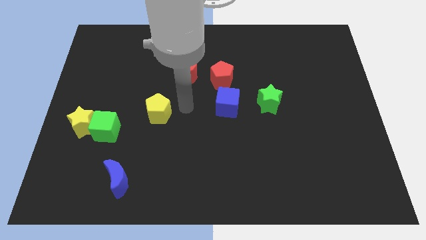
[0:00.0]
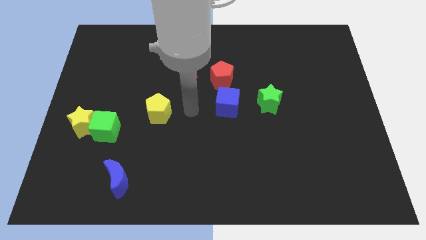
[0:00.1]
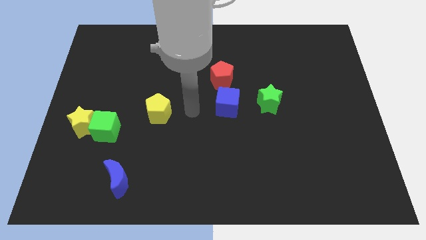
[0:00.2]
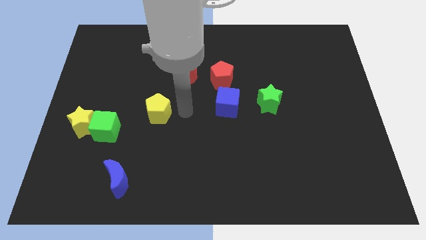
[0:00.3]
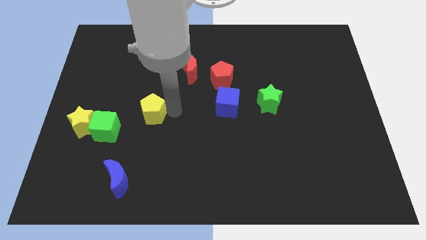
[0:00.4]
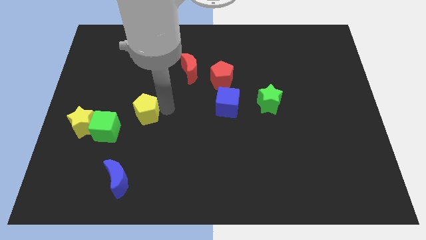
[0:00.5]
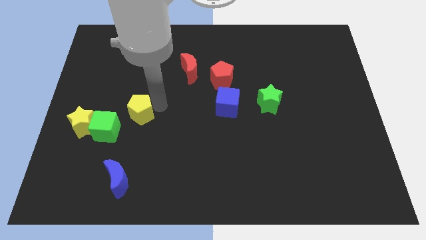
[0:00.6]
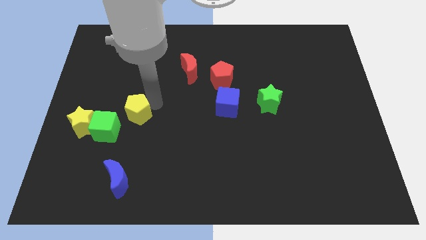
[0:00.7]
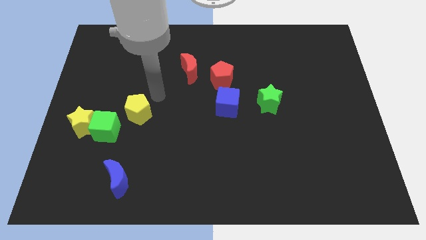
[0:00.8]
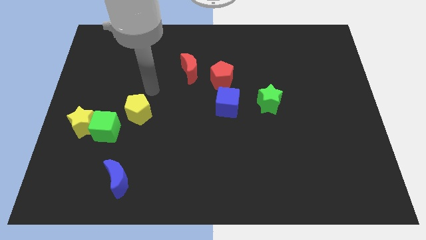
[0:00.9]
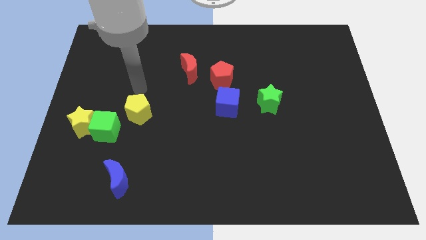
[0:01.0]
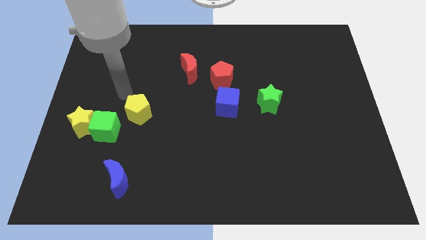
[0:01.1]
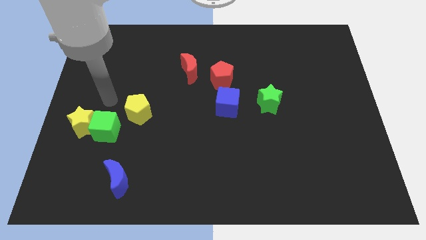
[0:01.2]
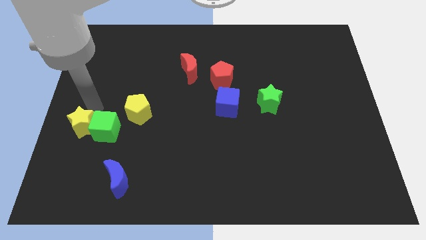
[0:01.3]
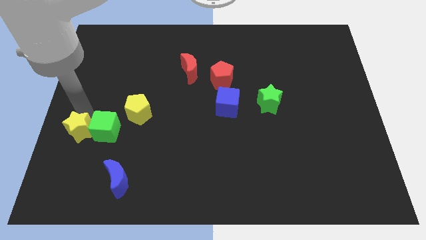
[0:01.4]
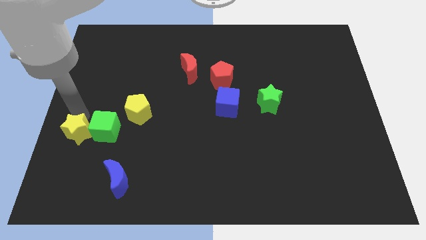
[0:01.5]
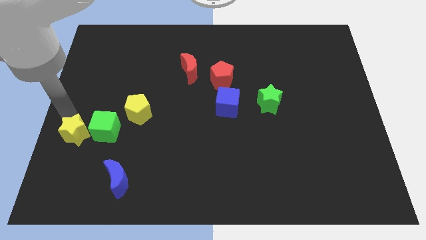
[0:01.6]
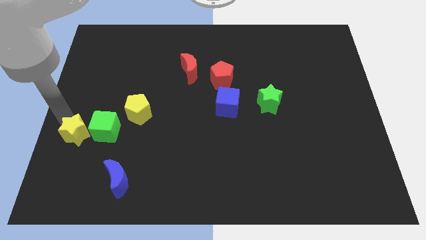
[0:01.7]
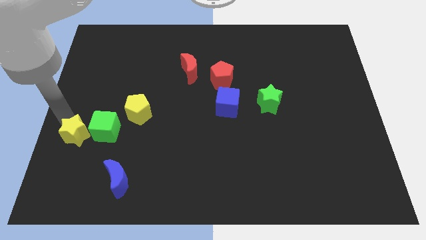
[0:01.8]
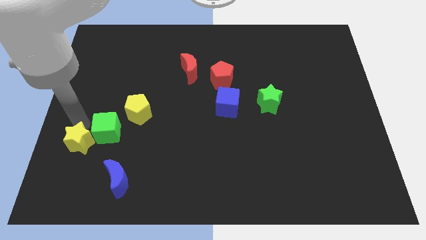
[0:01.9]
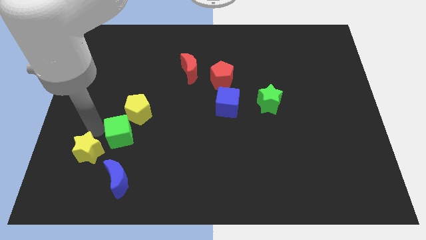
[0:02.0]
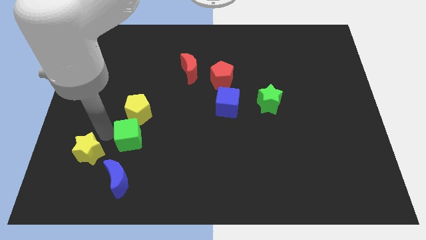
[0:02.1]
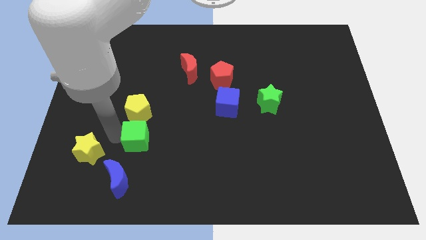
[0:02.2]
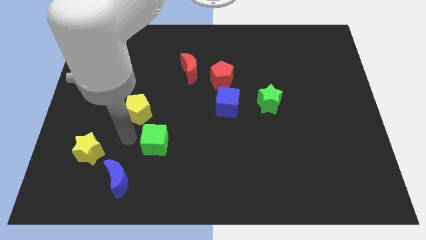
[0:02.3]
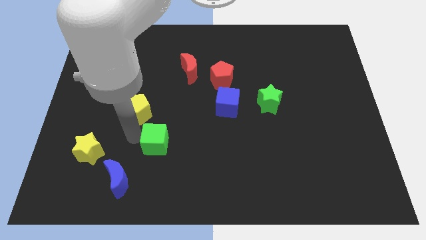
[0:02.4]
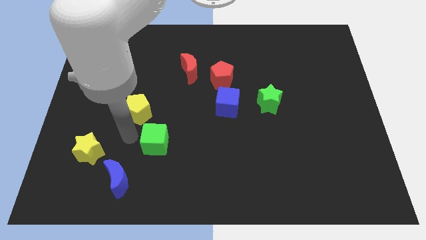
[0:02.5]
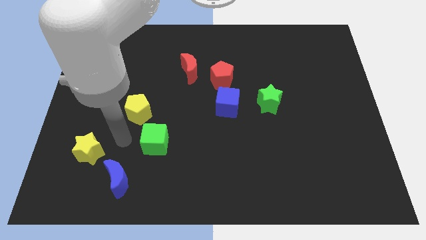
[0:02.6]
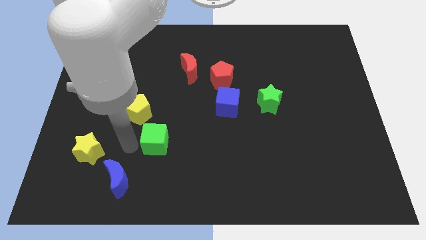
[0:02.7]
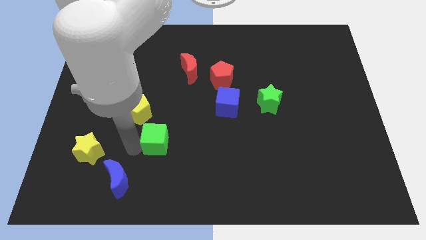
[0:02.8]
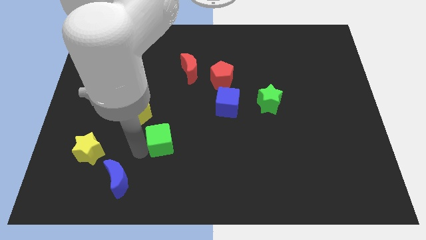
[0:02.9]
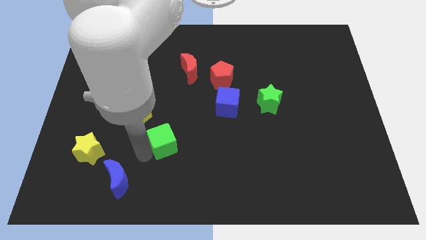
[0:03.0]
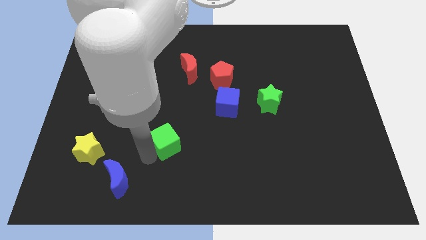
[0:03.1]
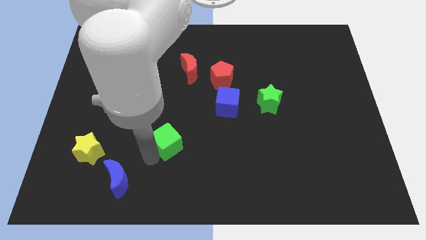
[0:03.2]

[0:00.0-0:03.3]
separate green cube from yellow star

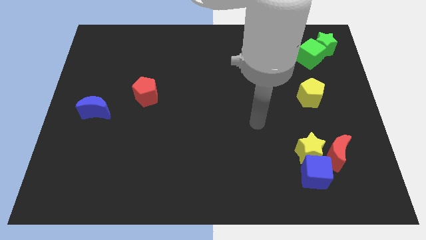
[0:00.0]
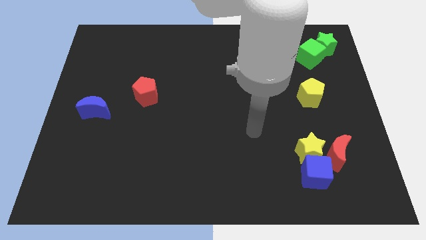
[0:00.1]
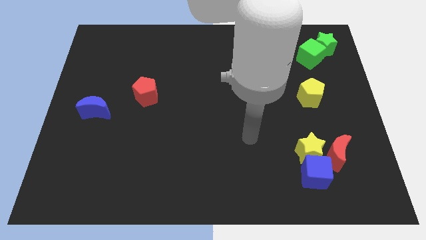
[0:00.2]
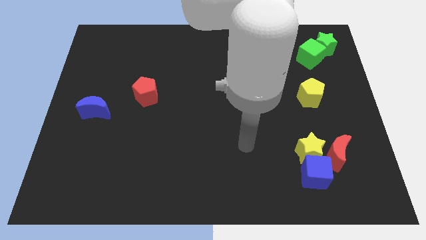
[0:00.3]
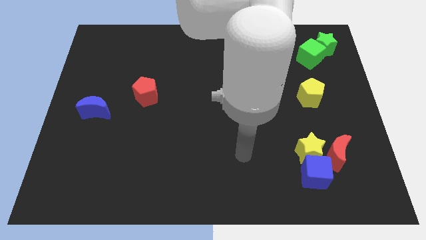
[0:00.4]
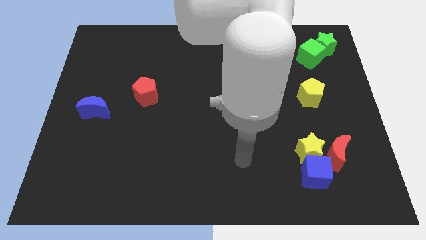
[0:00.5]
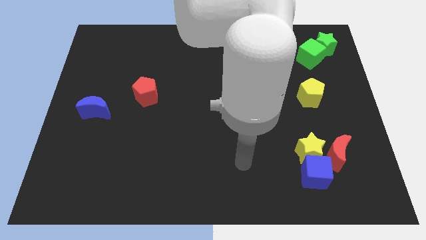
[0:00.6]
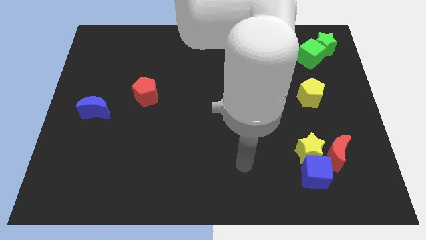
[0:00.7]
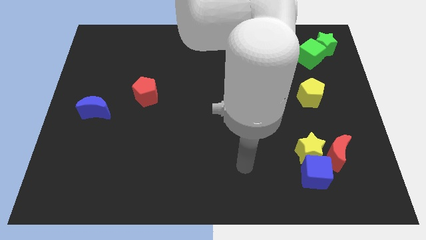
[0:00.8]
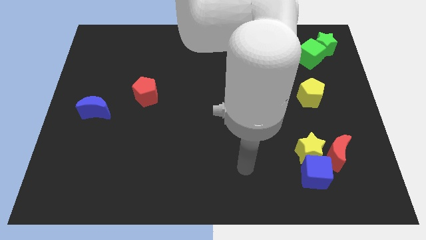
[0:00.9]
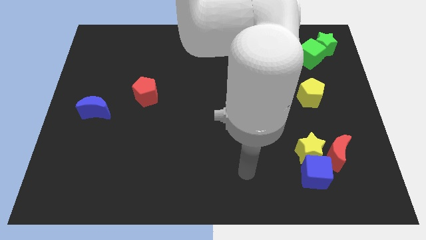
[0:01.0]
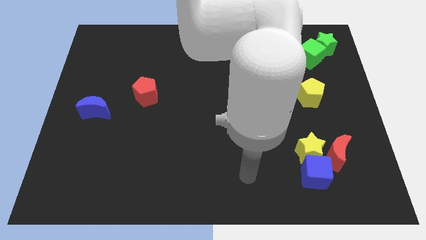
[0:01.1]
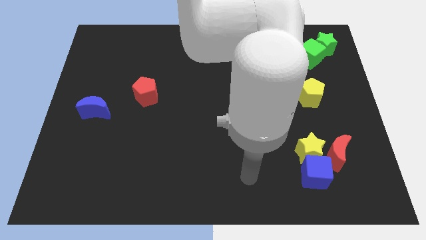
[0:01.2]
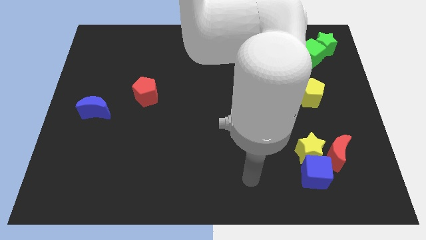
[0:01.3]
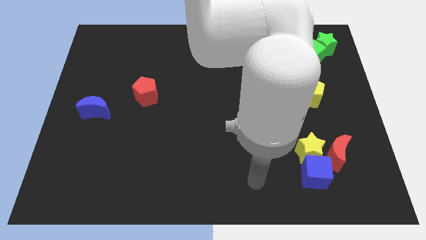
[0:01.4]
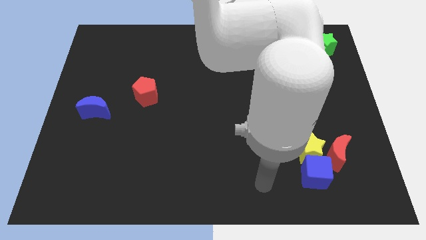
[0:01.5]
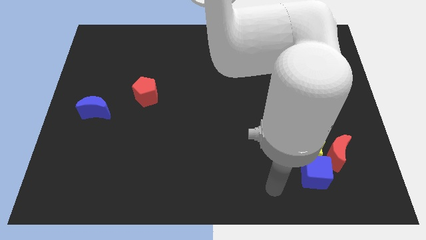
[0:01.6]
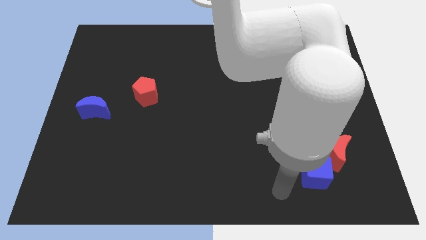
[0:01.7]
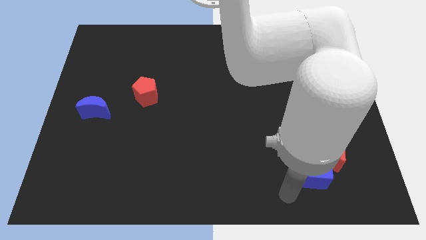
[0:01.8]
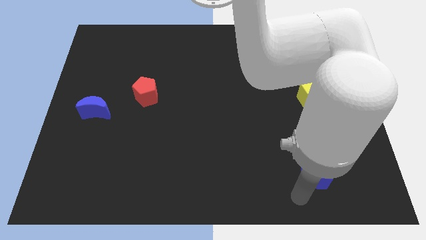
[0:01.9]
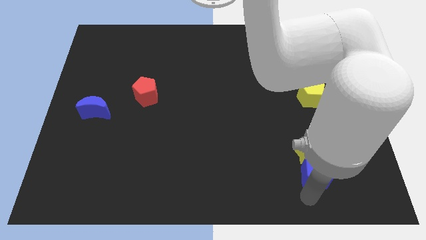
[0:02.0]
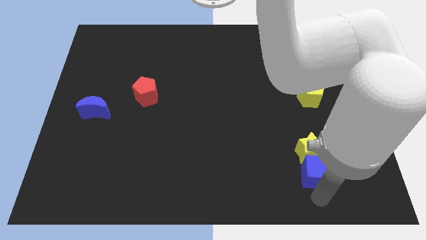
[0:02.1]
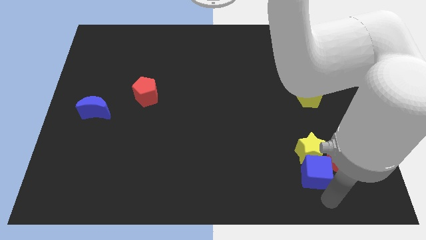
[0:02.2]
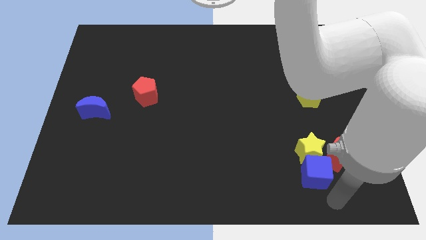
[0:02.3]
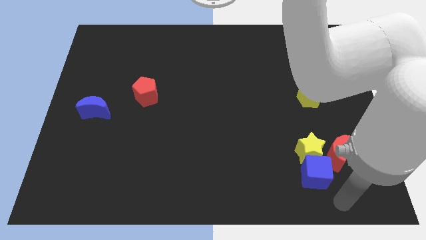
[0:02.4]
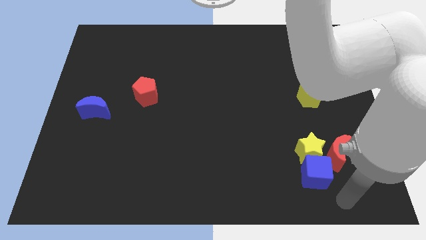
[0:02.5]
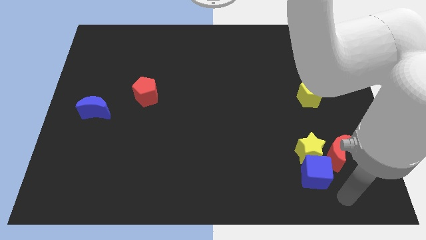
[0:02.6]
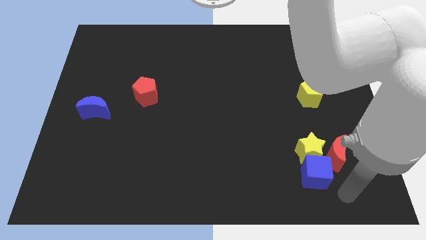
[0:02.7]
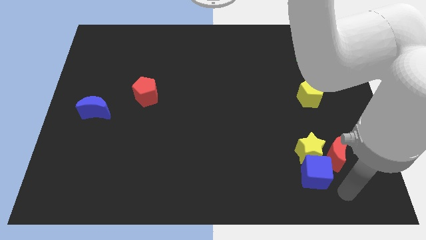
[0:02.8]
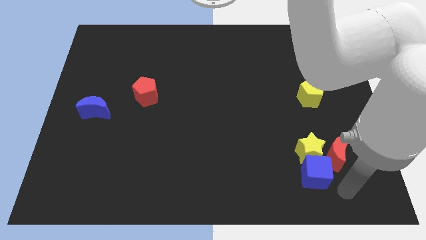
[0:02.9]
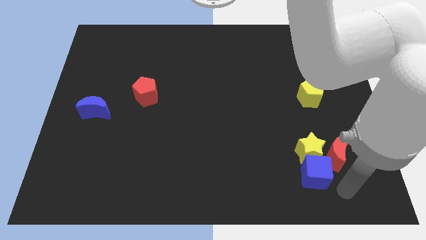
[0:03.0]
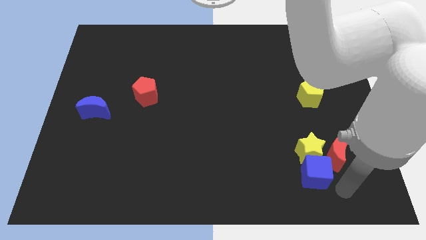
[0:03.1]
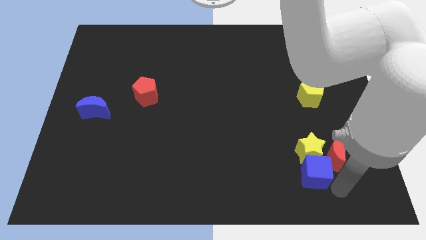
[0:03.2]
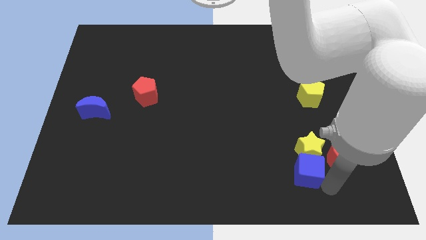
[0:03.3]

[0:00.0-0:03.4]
slightly touch the blue cube

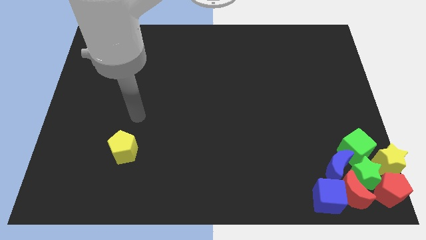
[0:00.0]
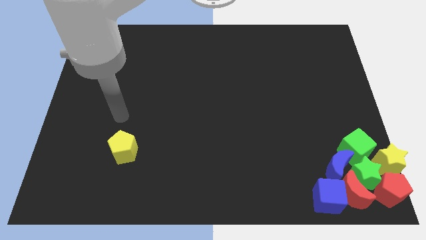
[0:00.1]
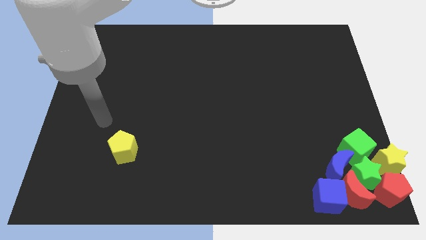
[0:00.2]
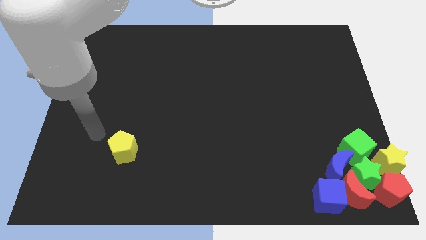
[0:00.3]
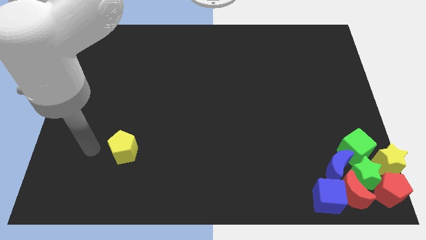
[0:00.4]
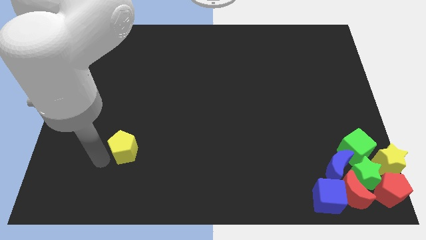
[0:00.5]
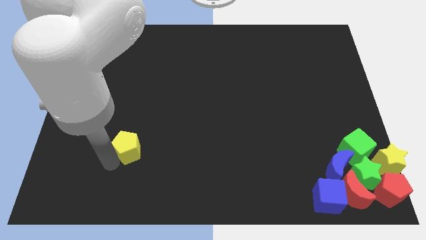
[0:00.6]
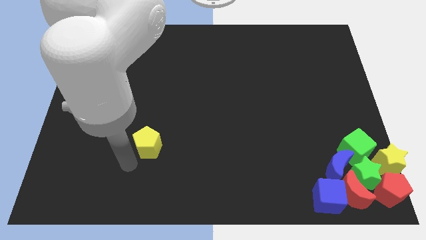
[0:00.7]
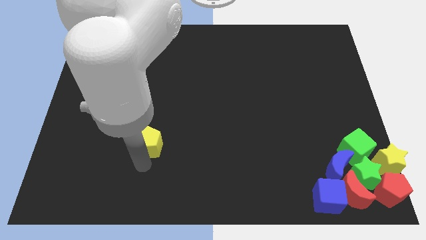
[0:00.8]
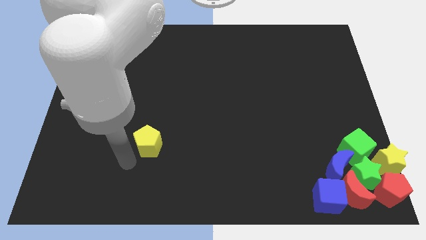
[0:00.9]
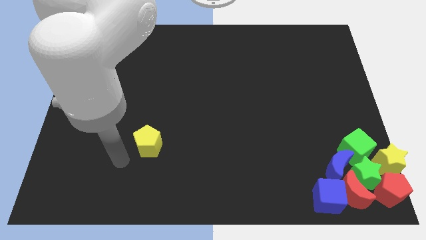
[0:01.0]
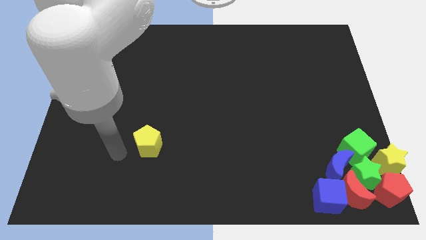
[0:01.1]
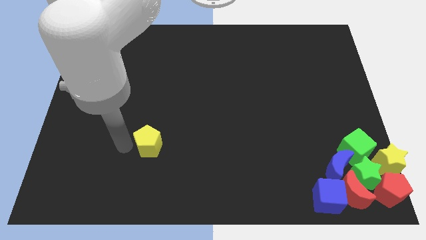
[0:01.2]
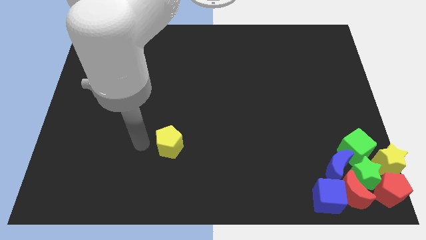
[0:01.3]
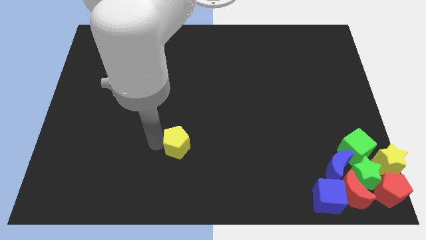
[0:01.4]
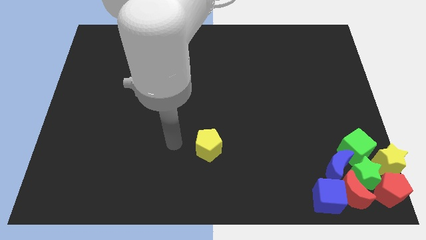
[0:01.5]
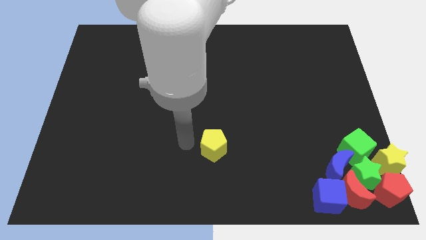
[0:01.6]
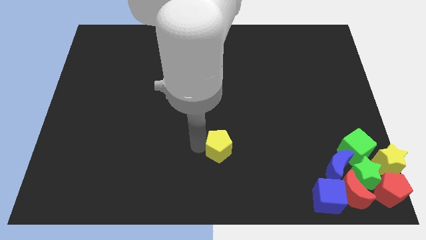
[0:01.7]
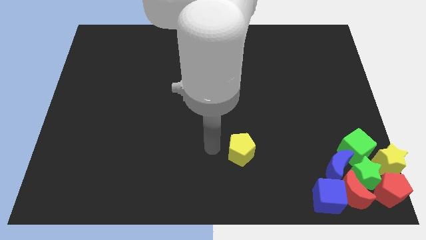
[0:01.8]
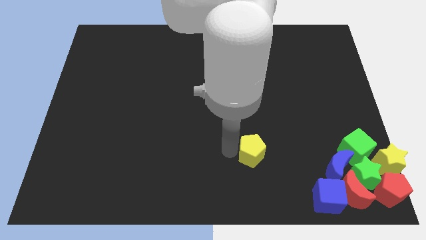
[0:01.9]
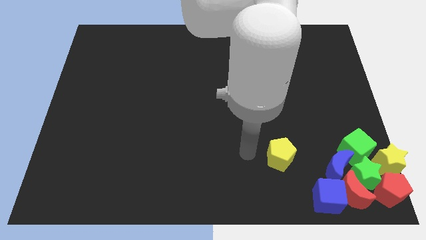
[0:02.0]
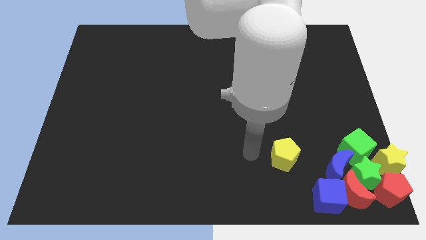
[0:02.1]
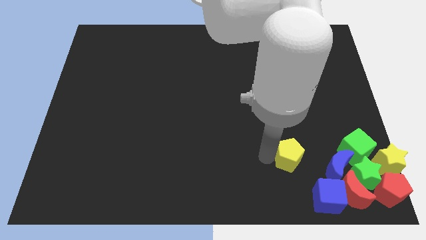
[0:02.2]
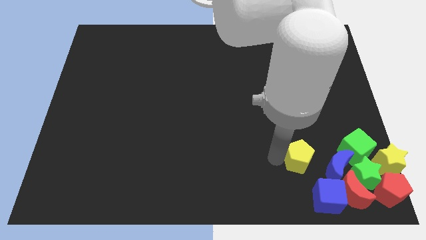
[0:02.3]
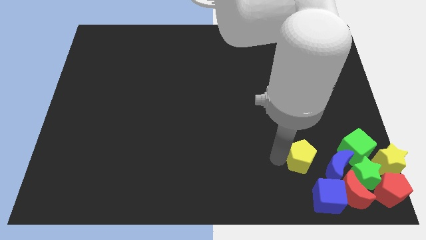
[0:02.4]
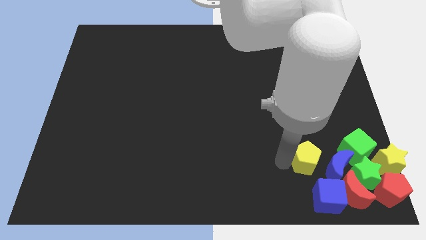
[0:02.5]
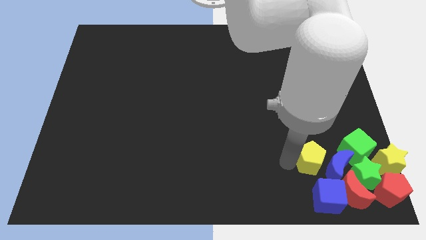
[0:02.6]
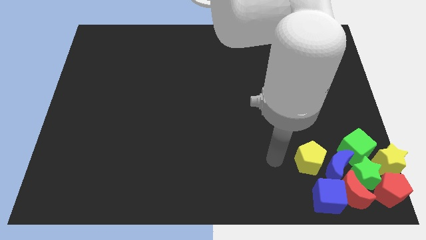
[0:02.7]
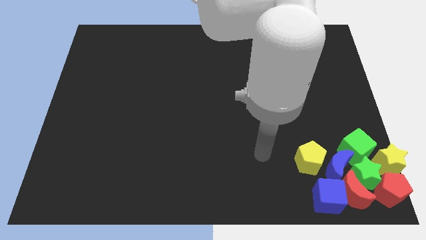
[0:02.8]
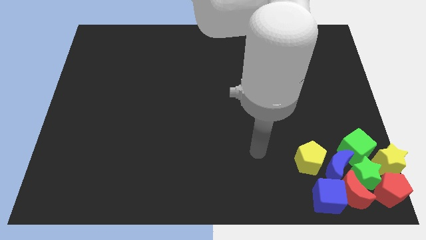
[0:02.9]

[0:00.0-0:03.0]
move the yellow pentagon towards the blue moon
